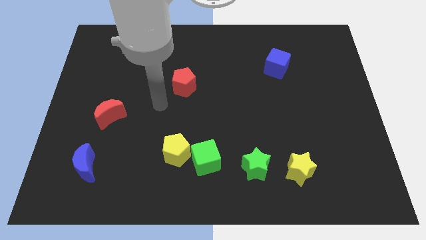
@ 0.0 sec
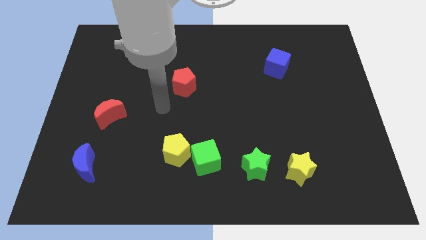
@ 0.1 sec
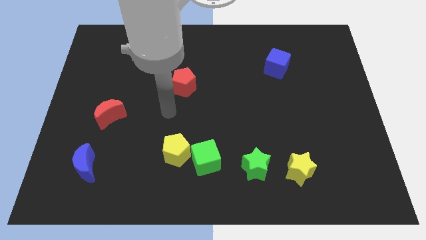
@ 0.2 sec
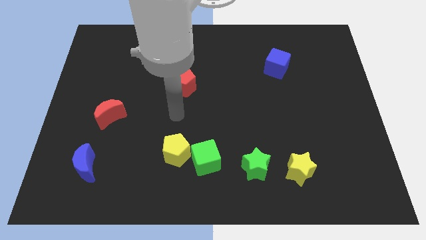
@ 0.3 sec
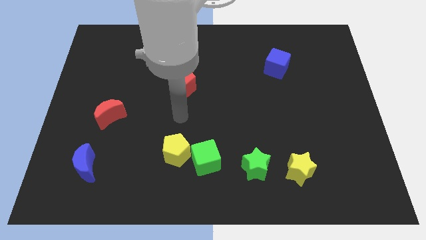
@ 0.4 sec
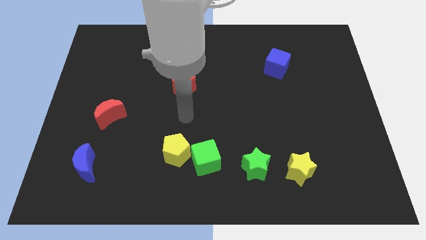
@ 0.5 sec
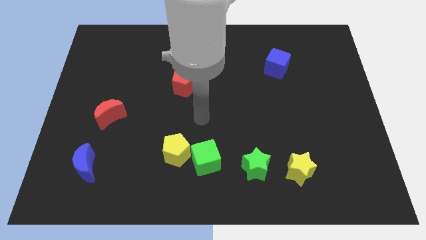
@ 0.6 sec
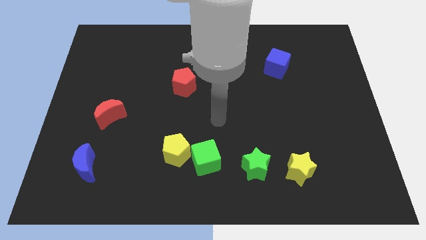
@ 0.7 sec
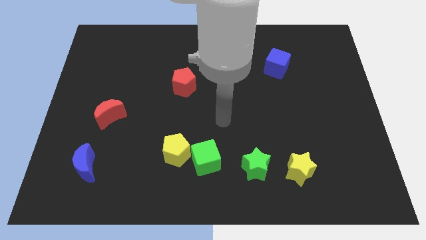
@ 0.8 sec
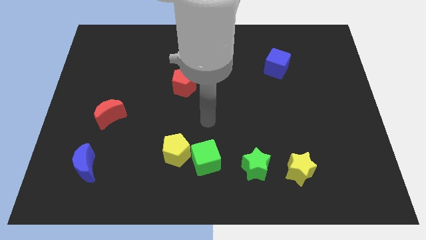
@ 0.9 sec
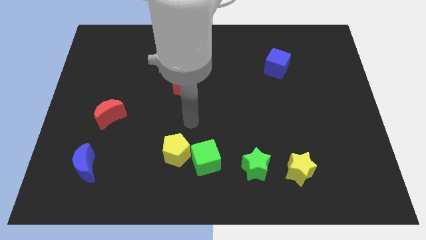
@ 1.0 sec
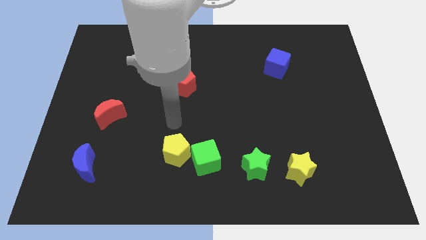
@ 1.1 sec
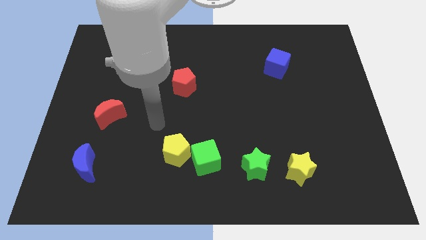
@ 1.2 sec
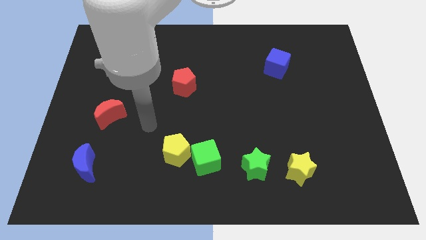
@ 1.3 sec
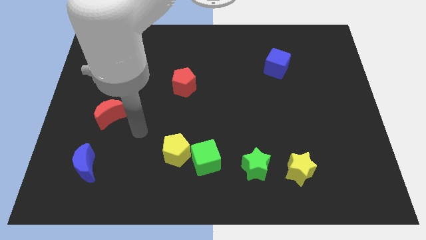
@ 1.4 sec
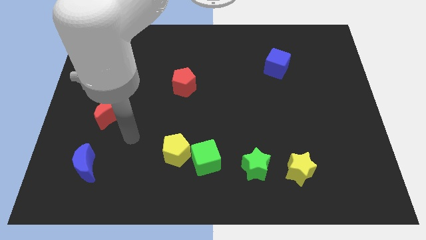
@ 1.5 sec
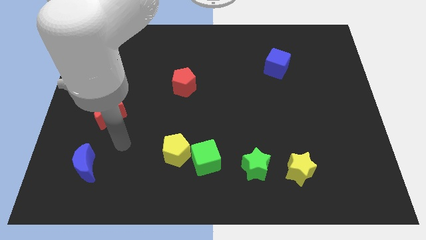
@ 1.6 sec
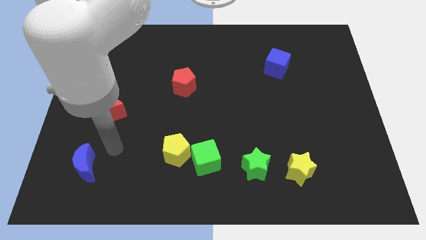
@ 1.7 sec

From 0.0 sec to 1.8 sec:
drag the pointer towards the blue moon

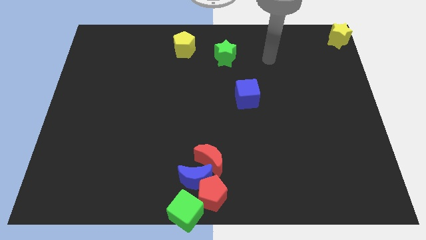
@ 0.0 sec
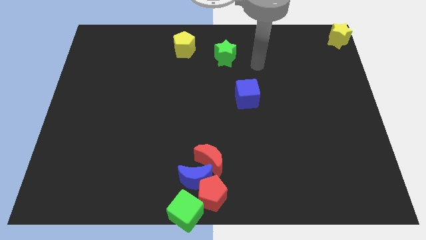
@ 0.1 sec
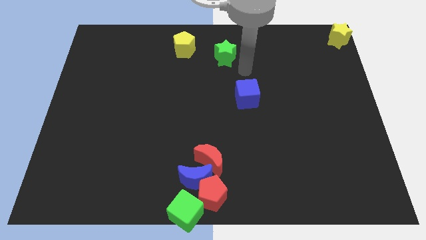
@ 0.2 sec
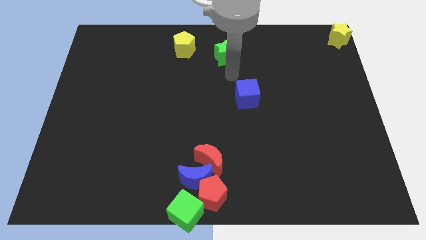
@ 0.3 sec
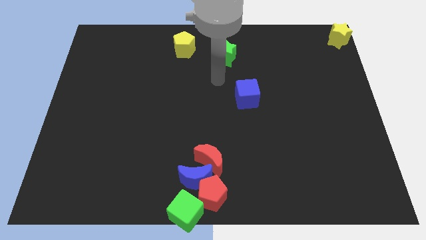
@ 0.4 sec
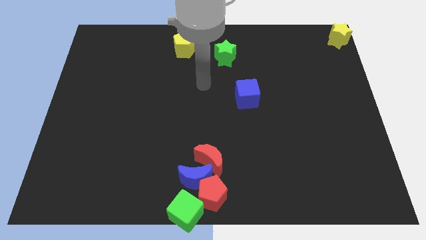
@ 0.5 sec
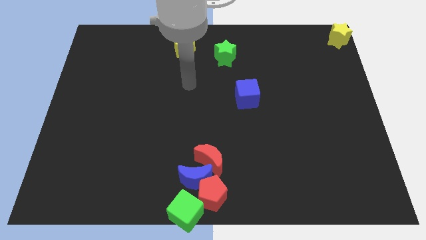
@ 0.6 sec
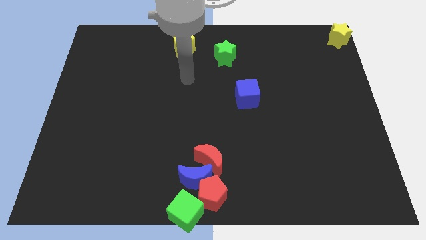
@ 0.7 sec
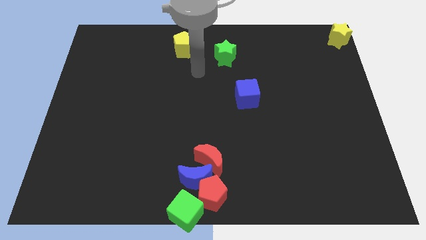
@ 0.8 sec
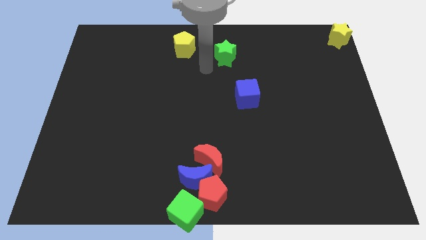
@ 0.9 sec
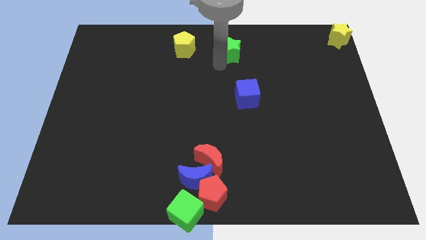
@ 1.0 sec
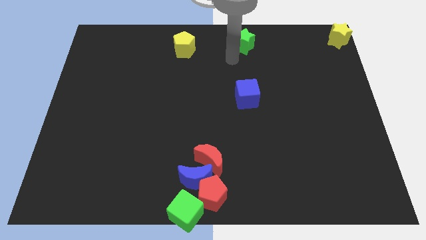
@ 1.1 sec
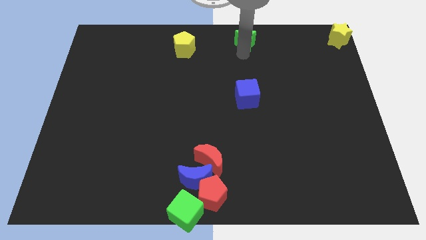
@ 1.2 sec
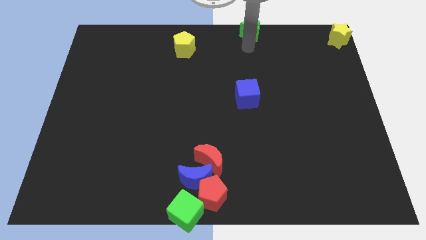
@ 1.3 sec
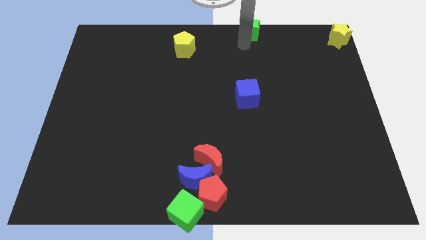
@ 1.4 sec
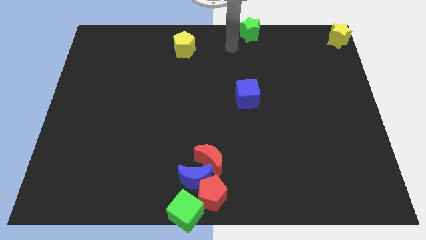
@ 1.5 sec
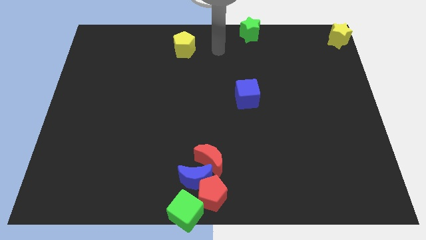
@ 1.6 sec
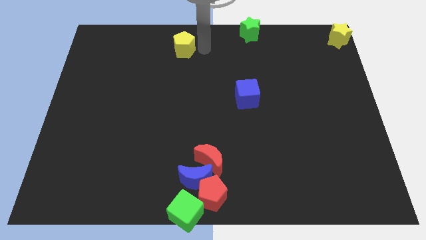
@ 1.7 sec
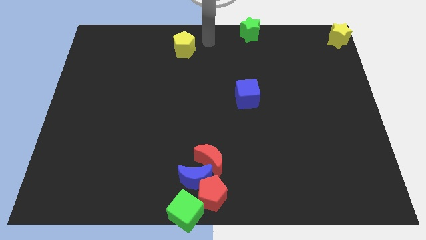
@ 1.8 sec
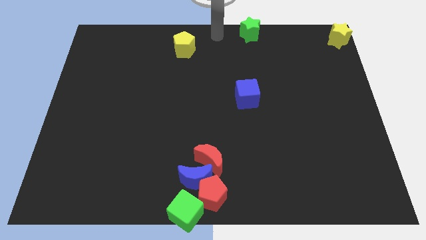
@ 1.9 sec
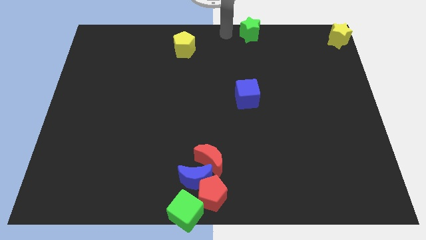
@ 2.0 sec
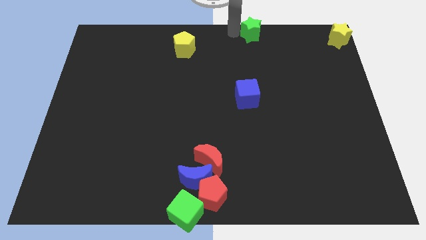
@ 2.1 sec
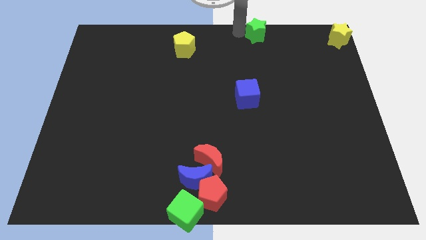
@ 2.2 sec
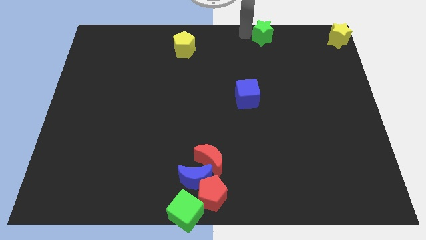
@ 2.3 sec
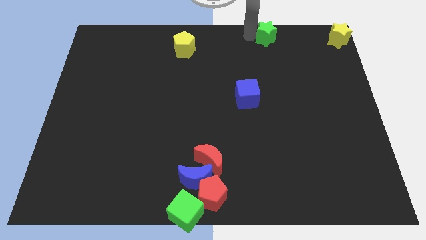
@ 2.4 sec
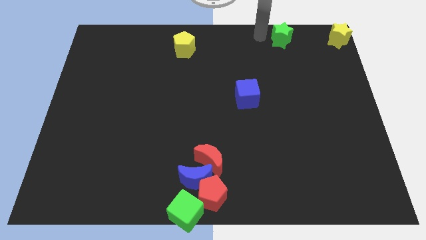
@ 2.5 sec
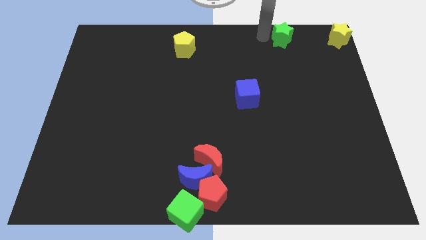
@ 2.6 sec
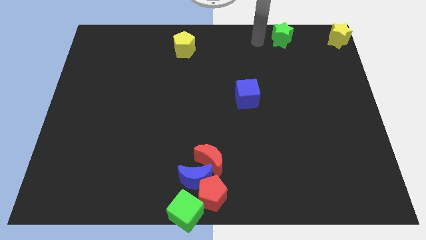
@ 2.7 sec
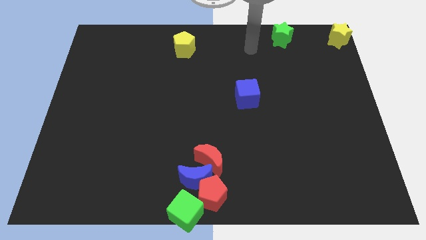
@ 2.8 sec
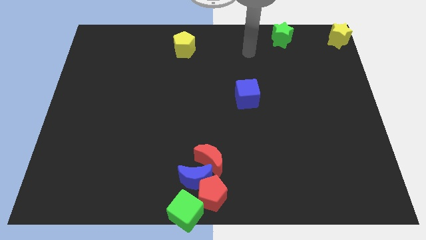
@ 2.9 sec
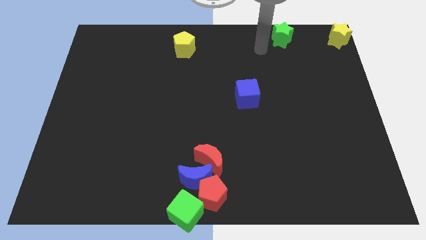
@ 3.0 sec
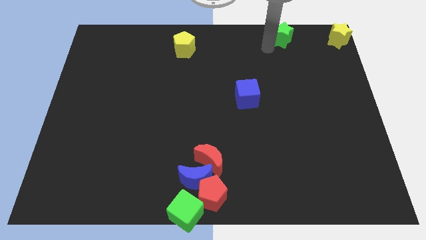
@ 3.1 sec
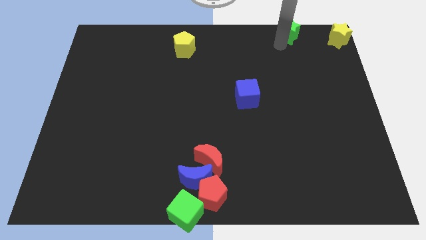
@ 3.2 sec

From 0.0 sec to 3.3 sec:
drag the green star parallel left to the yellow star

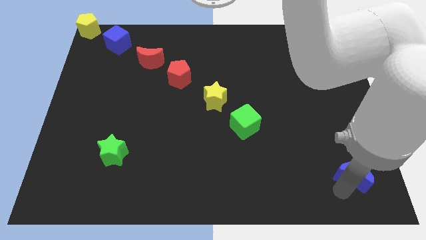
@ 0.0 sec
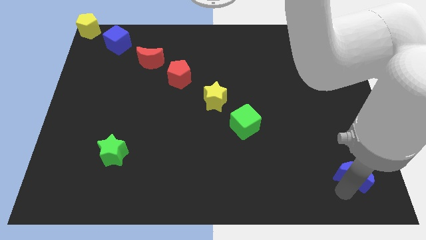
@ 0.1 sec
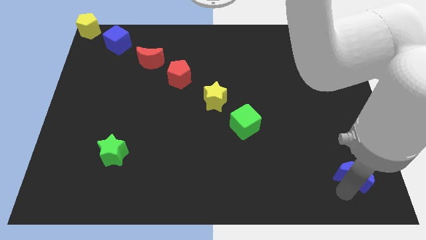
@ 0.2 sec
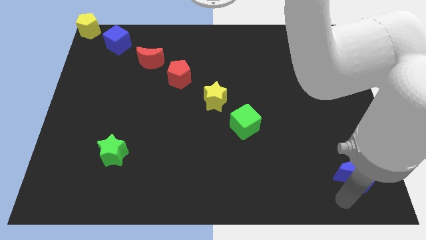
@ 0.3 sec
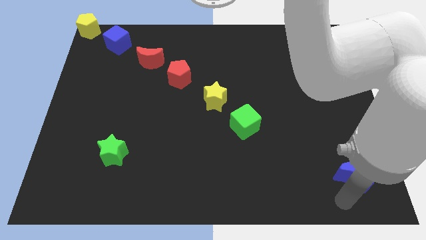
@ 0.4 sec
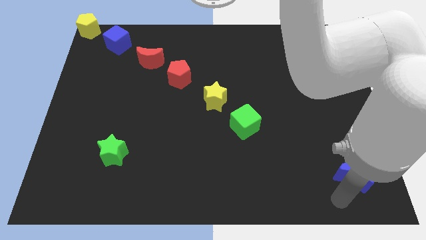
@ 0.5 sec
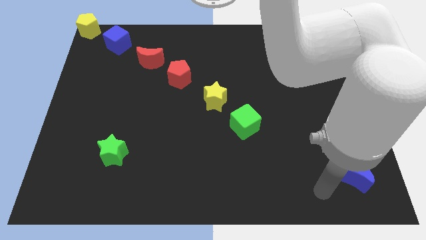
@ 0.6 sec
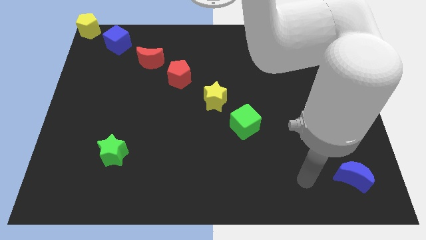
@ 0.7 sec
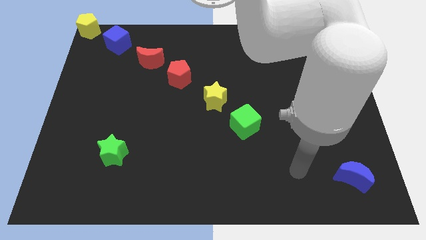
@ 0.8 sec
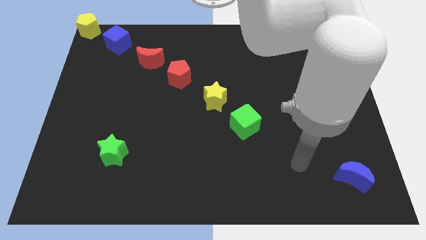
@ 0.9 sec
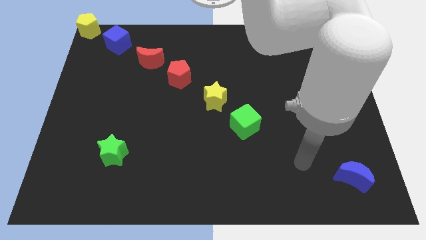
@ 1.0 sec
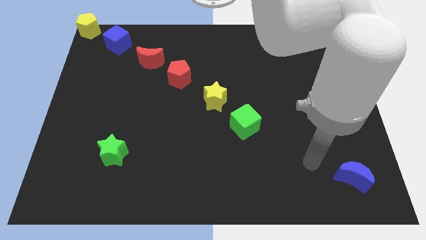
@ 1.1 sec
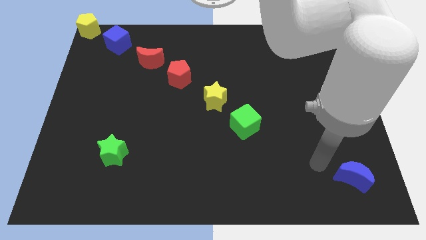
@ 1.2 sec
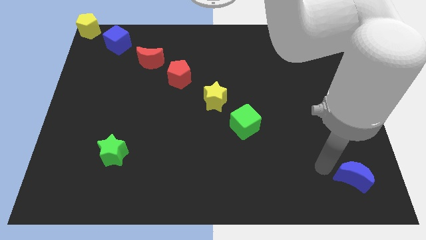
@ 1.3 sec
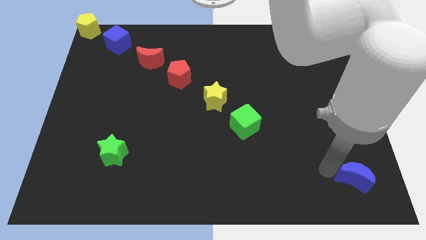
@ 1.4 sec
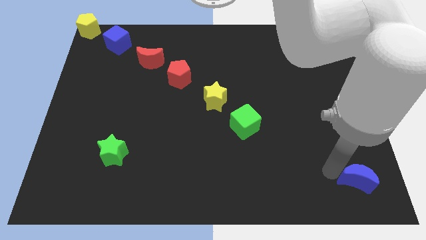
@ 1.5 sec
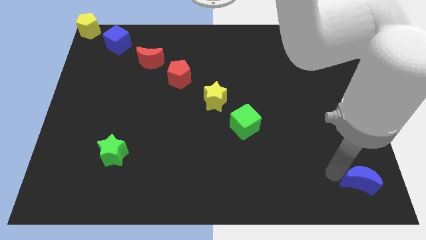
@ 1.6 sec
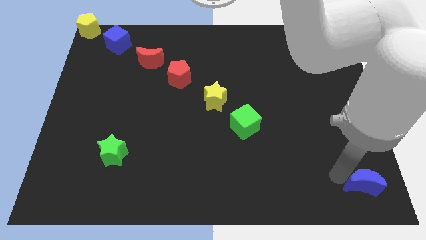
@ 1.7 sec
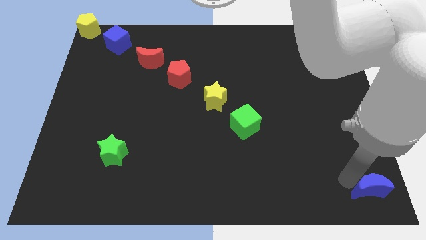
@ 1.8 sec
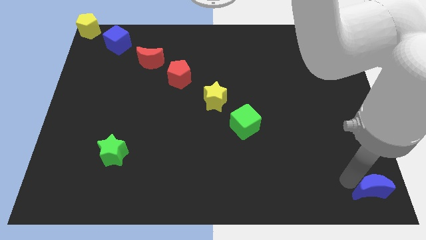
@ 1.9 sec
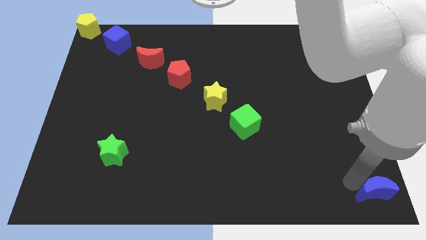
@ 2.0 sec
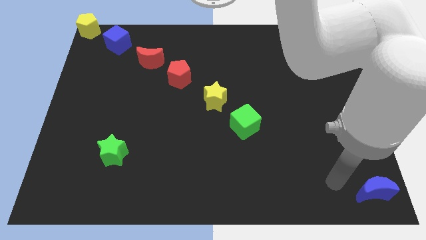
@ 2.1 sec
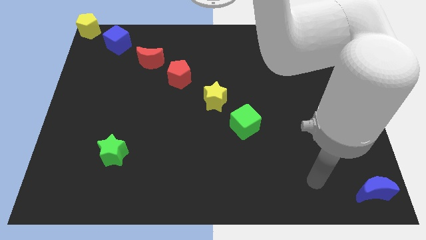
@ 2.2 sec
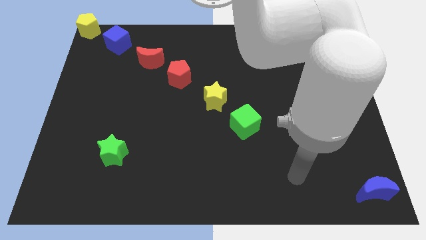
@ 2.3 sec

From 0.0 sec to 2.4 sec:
push the blue crescent to the bottom right on the board

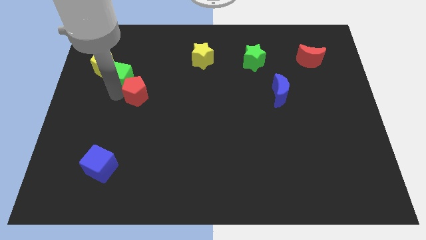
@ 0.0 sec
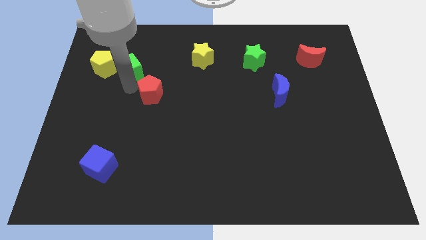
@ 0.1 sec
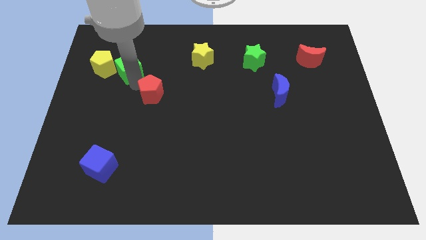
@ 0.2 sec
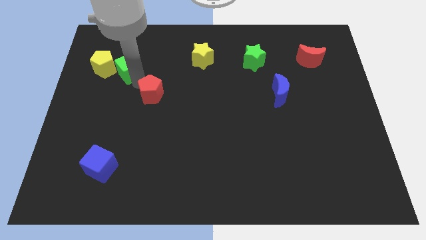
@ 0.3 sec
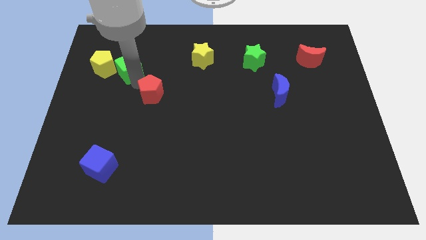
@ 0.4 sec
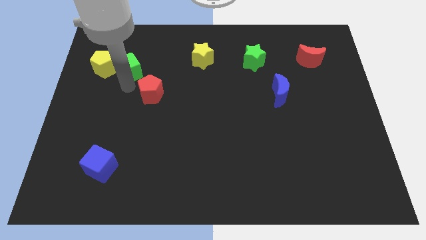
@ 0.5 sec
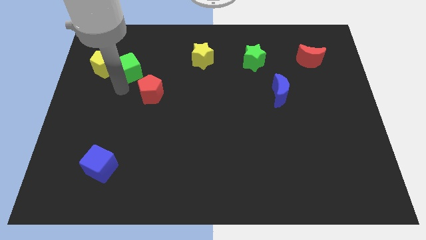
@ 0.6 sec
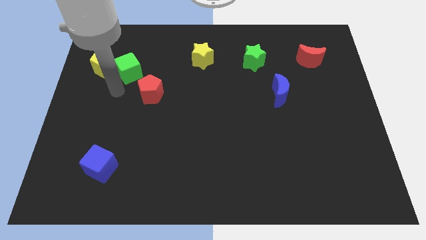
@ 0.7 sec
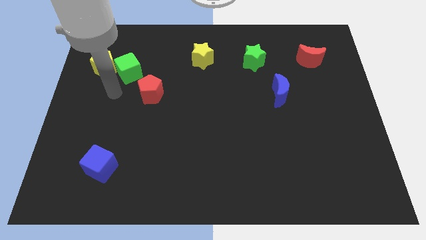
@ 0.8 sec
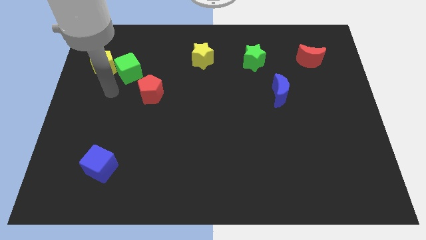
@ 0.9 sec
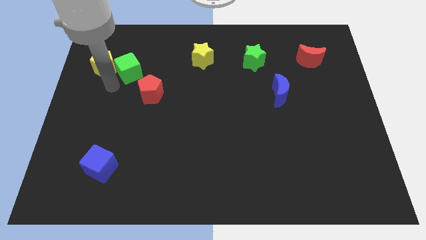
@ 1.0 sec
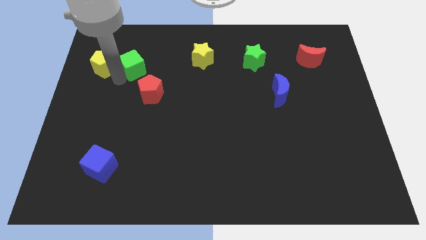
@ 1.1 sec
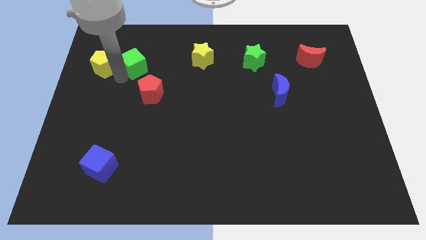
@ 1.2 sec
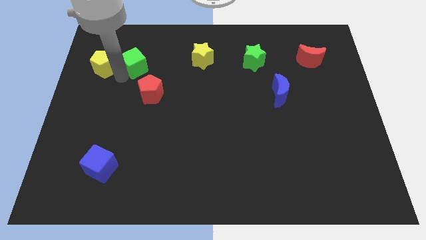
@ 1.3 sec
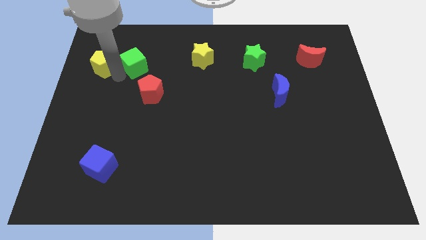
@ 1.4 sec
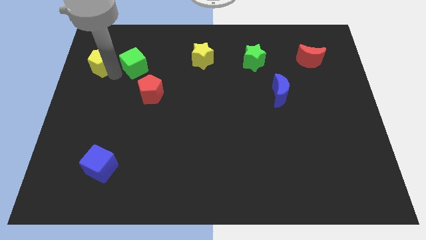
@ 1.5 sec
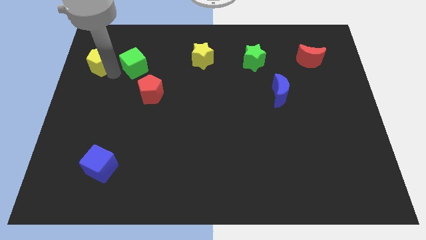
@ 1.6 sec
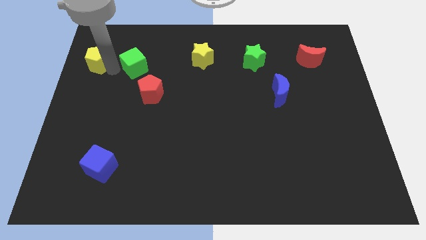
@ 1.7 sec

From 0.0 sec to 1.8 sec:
move the green cube away from the yellow and the red pentagon
